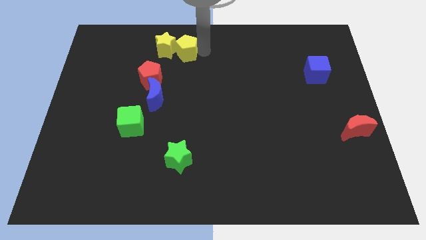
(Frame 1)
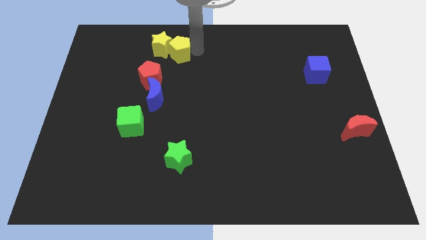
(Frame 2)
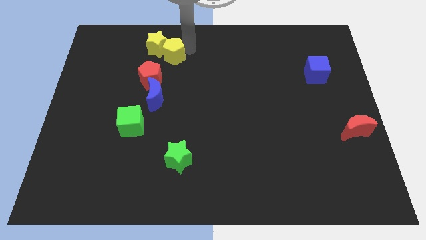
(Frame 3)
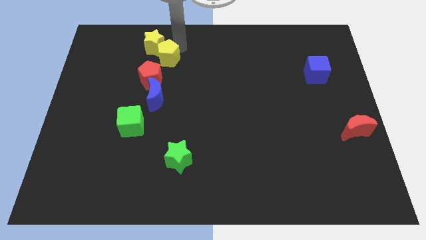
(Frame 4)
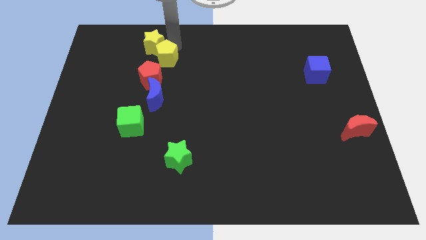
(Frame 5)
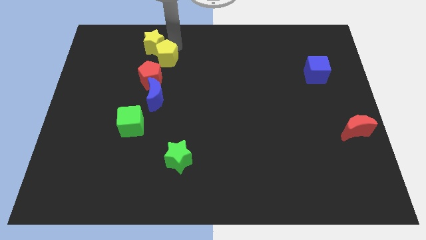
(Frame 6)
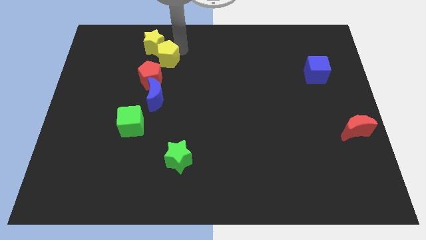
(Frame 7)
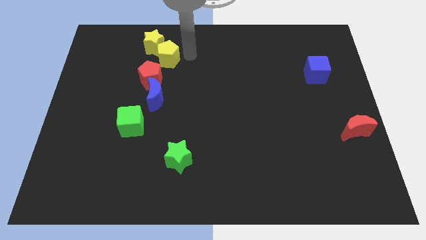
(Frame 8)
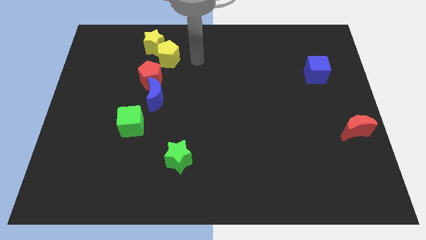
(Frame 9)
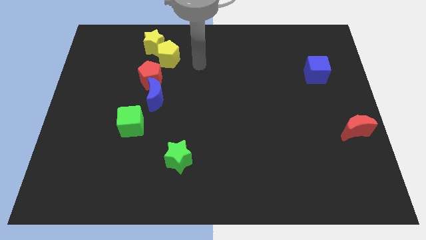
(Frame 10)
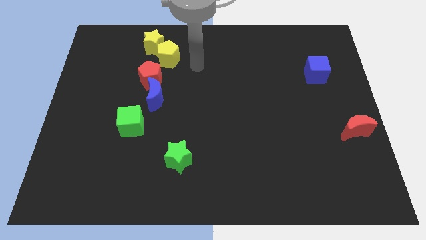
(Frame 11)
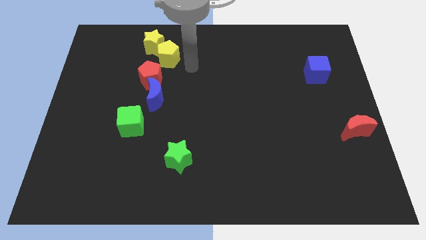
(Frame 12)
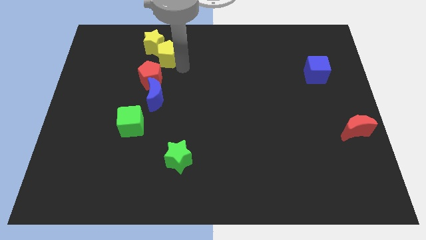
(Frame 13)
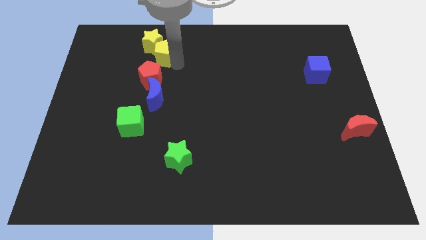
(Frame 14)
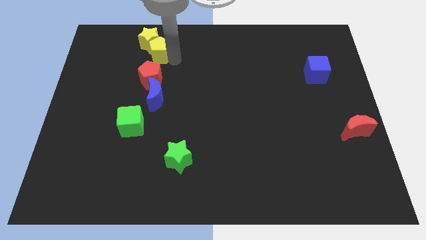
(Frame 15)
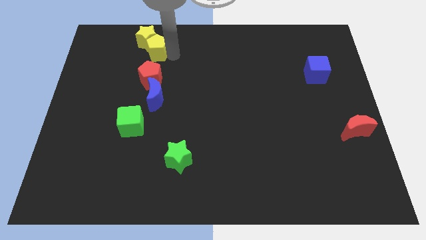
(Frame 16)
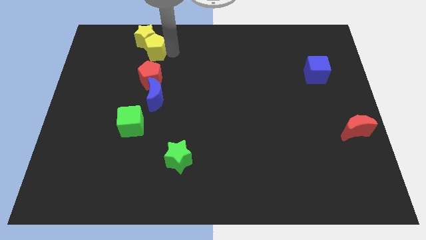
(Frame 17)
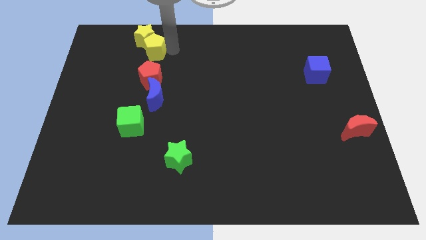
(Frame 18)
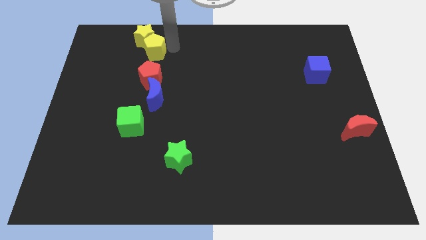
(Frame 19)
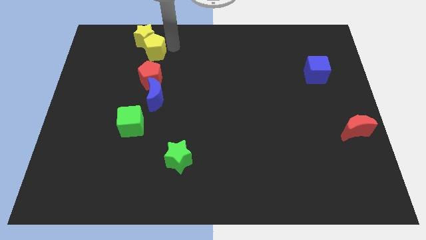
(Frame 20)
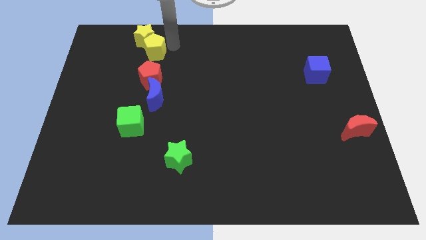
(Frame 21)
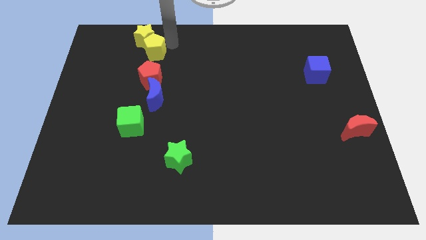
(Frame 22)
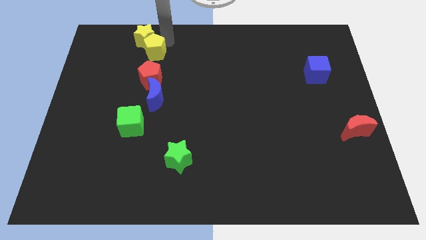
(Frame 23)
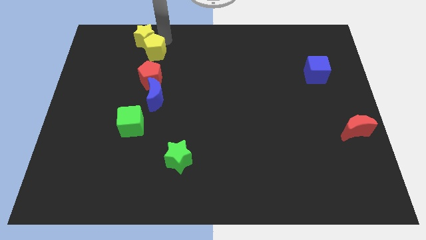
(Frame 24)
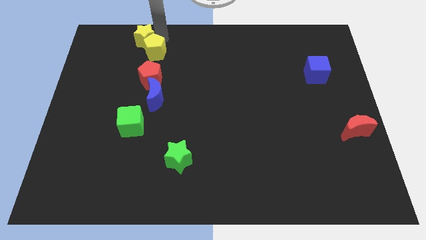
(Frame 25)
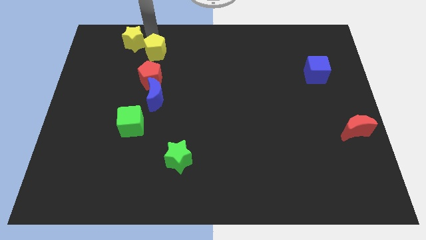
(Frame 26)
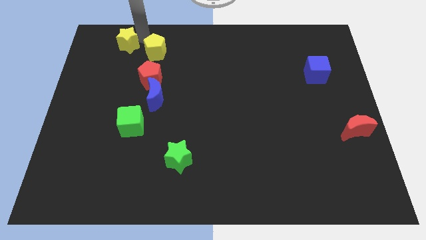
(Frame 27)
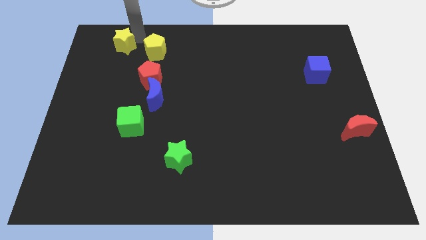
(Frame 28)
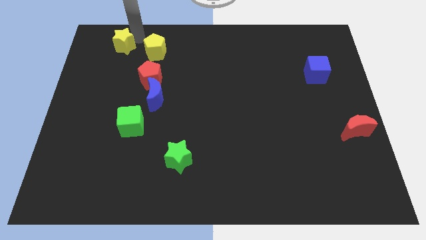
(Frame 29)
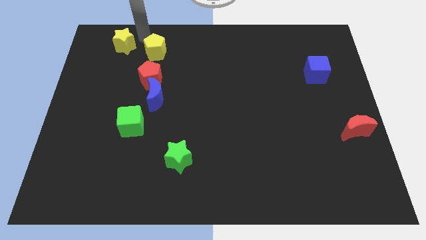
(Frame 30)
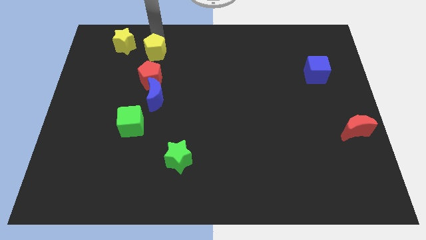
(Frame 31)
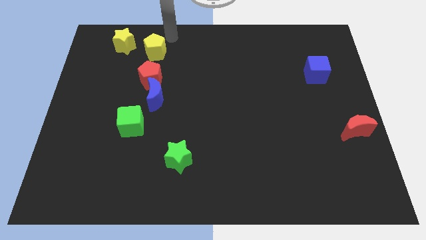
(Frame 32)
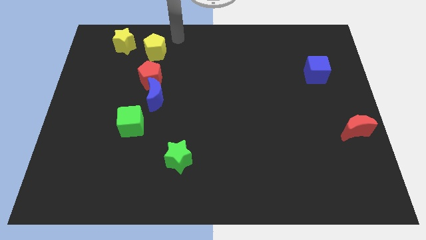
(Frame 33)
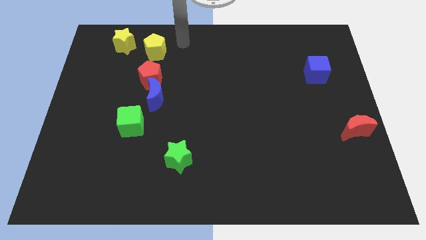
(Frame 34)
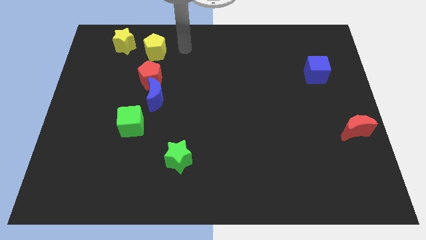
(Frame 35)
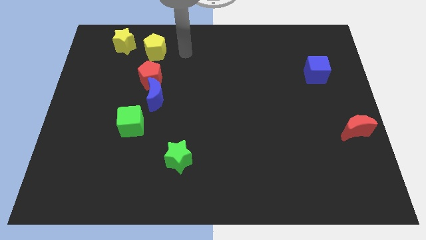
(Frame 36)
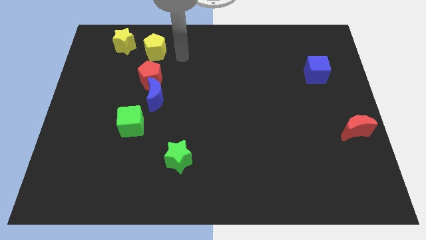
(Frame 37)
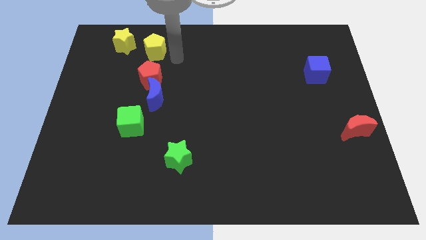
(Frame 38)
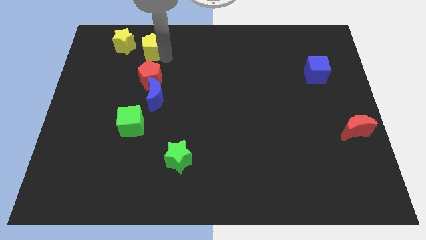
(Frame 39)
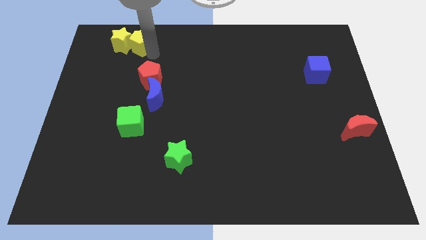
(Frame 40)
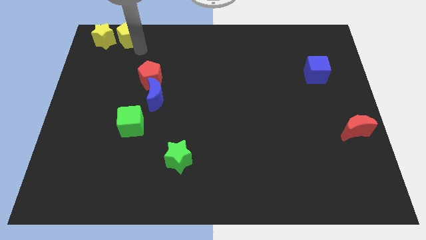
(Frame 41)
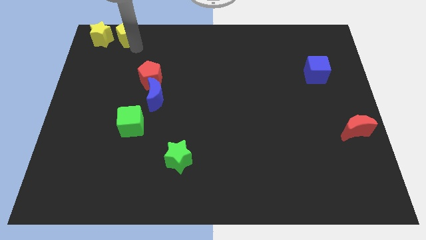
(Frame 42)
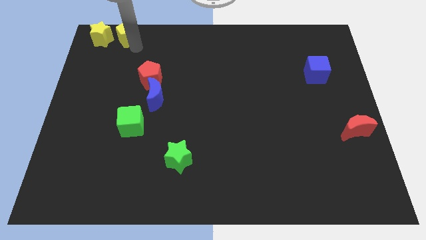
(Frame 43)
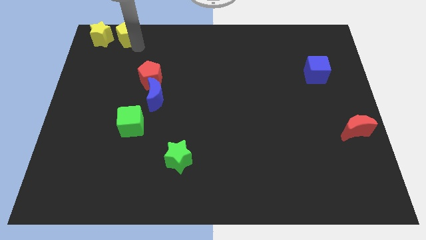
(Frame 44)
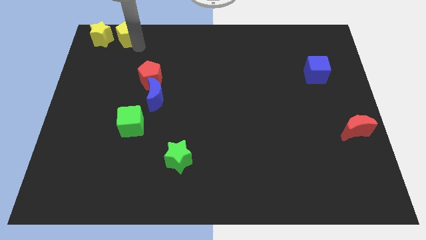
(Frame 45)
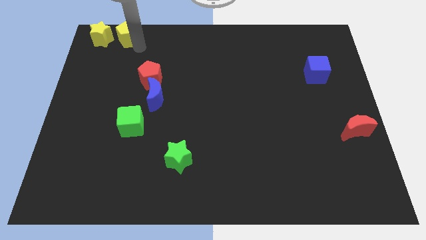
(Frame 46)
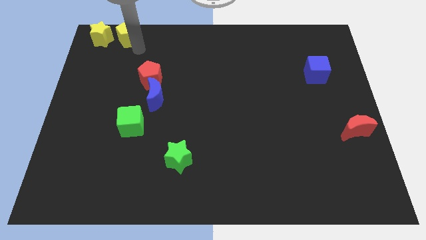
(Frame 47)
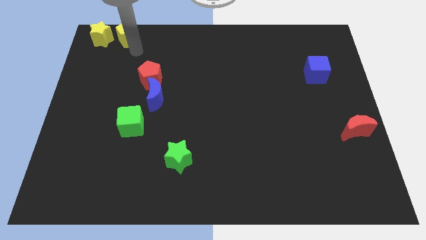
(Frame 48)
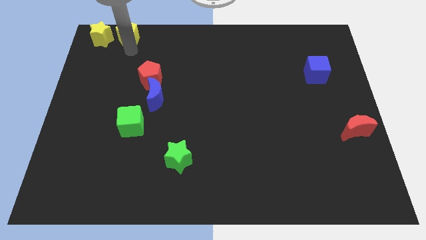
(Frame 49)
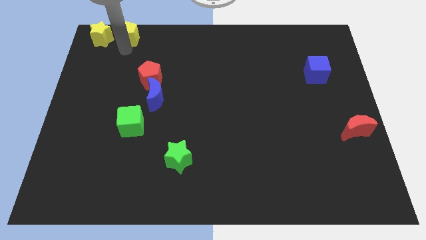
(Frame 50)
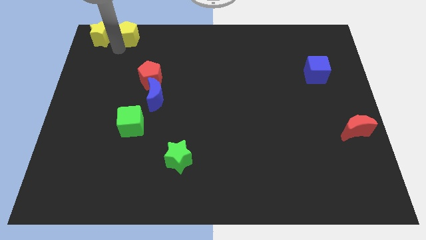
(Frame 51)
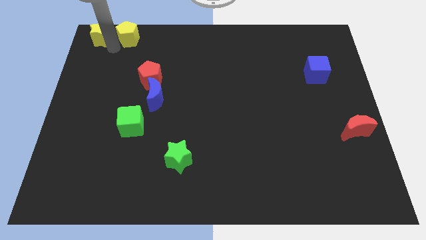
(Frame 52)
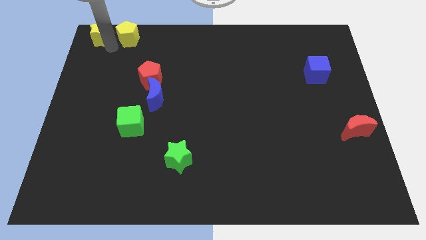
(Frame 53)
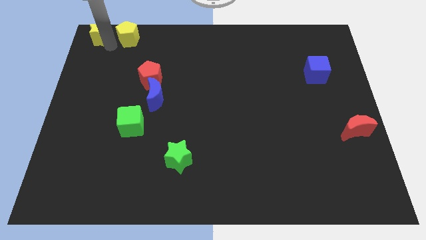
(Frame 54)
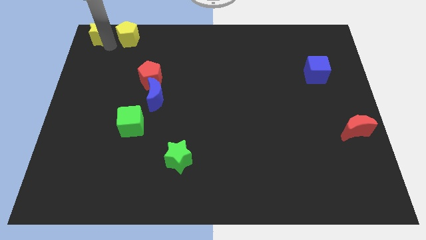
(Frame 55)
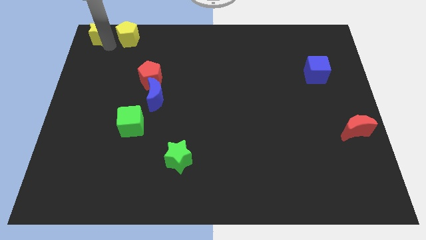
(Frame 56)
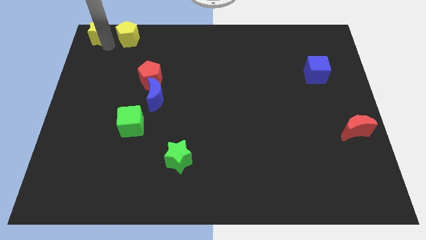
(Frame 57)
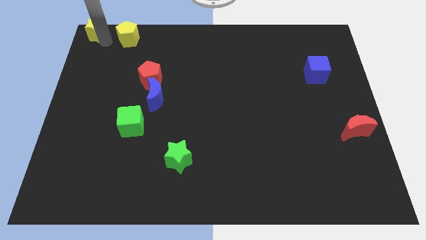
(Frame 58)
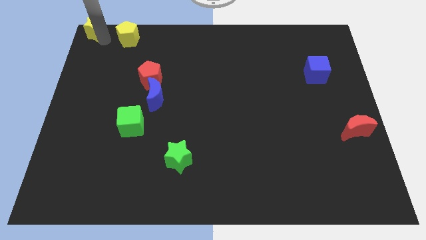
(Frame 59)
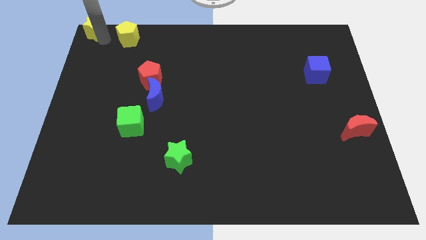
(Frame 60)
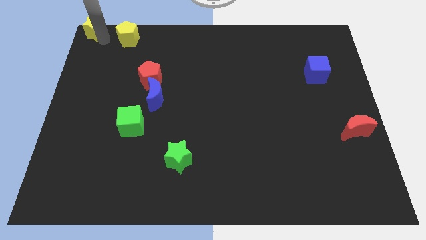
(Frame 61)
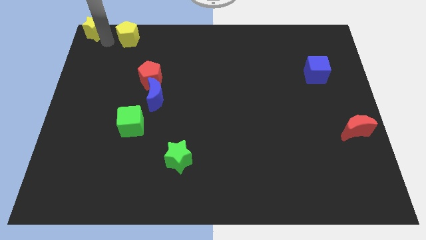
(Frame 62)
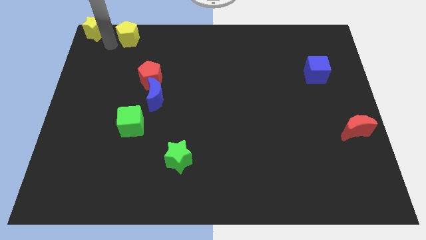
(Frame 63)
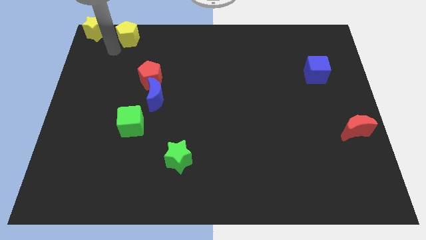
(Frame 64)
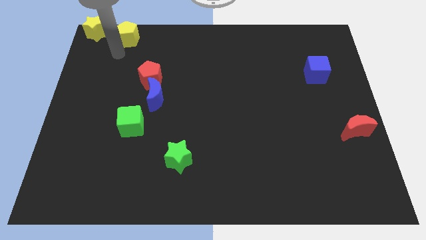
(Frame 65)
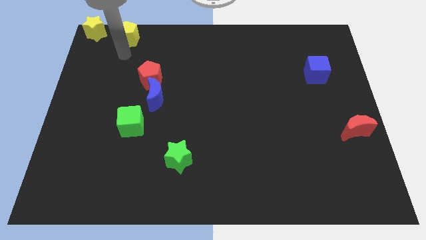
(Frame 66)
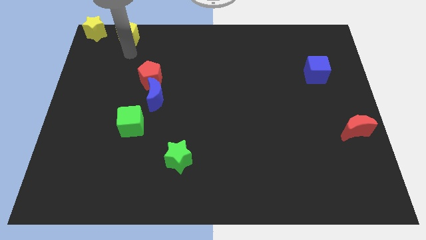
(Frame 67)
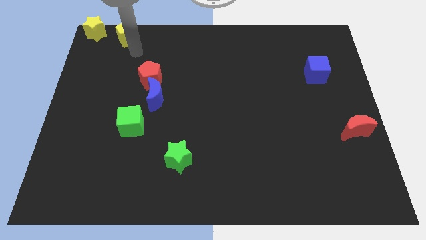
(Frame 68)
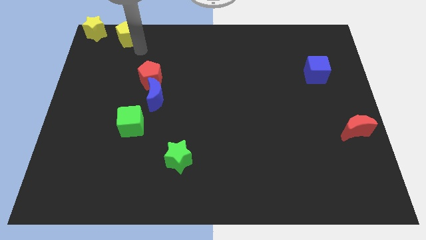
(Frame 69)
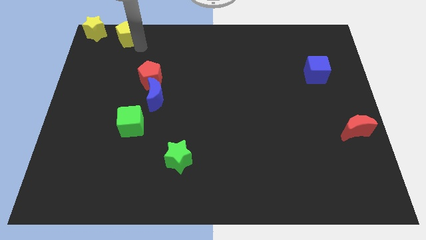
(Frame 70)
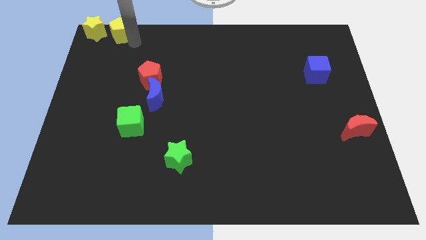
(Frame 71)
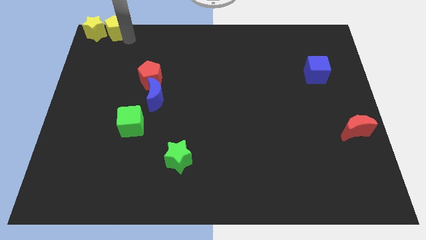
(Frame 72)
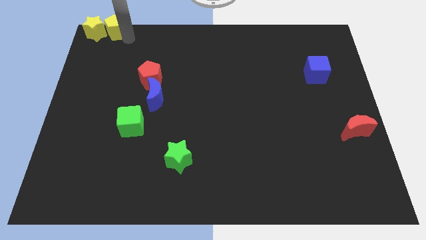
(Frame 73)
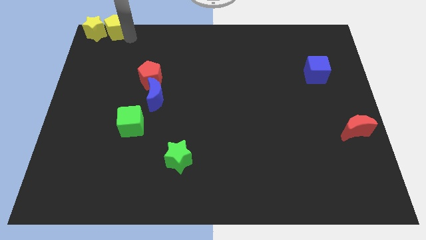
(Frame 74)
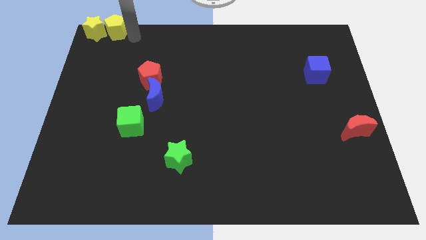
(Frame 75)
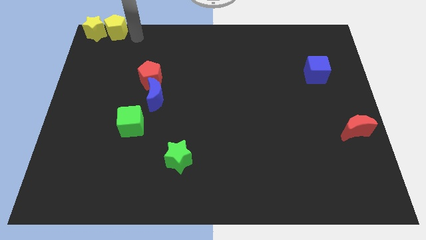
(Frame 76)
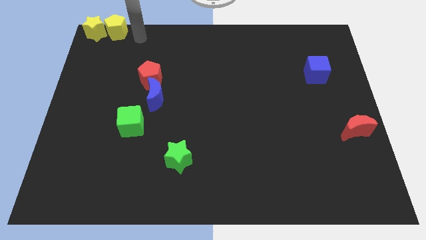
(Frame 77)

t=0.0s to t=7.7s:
place the yellow star and yellow pentagon to the top left corner of the board

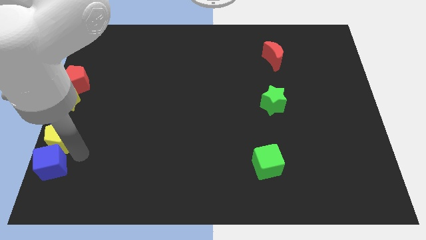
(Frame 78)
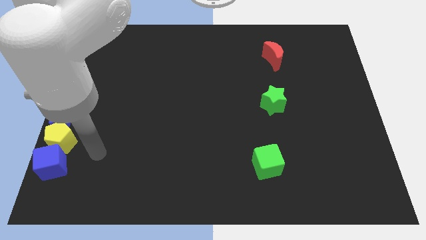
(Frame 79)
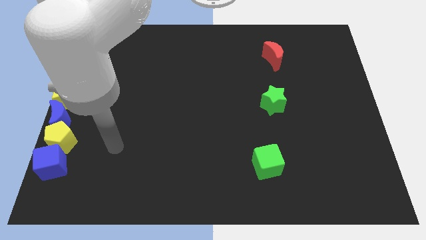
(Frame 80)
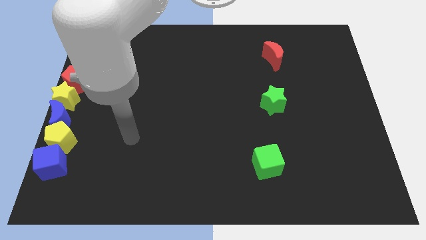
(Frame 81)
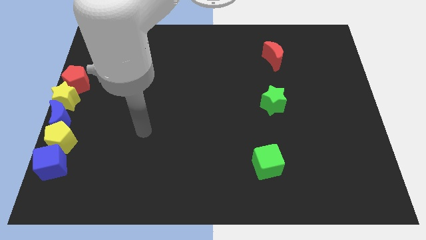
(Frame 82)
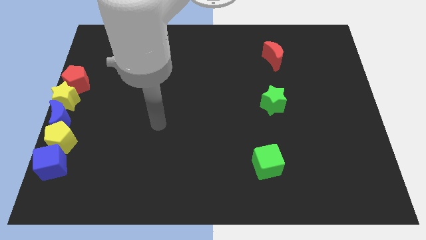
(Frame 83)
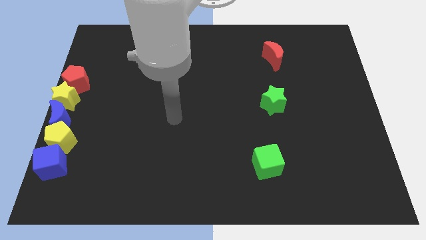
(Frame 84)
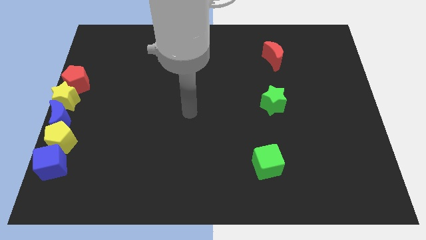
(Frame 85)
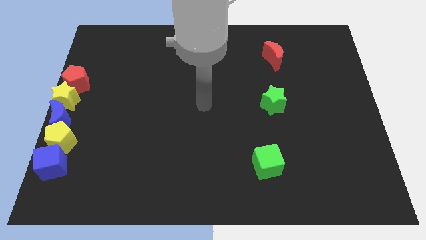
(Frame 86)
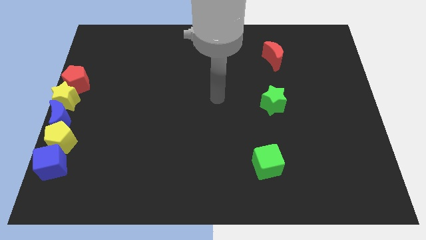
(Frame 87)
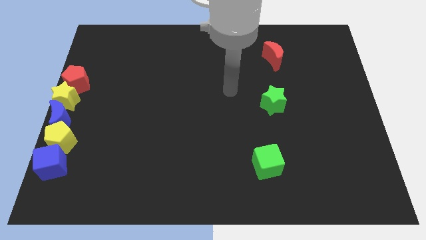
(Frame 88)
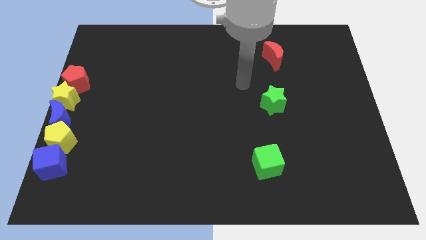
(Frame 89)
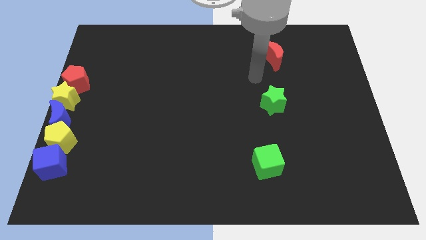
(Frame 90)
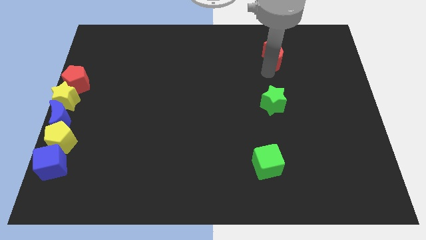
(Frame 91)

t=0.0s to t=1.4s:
move the arm away from the yellow pentagon
